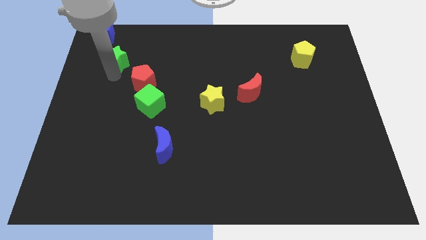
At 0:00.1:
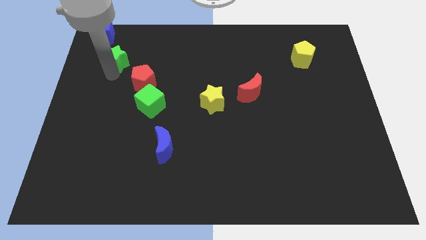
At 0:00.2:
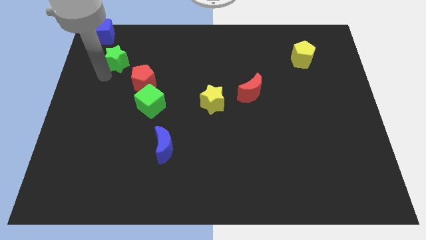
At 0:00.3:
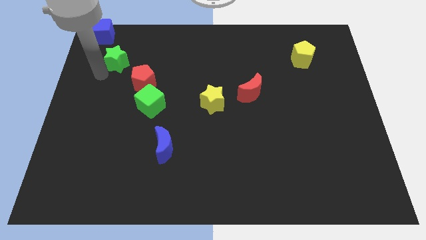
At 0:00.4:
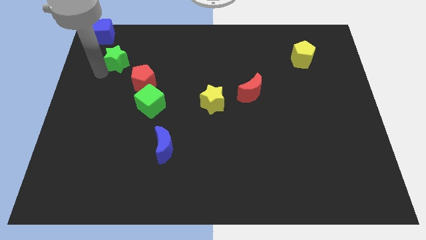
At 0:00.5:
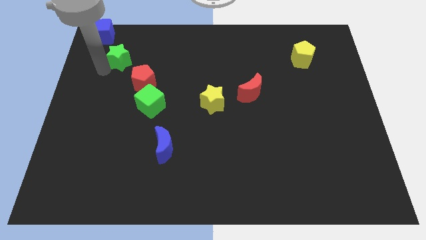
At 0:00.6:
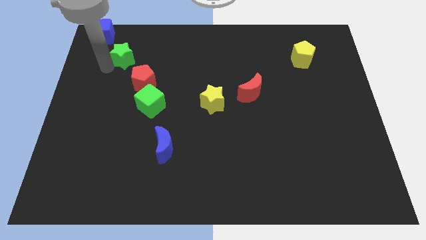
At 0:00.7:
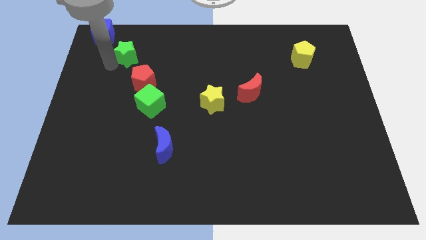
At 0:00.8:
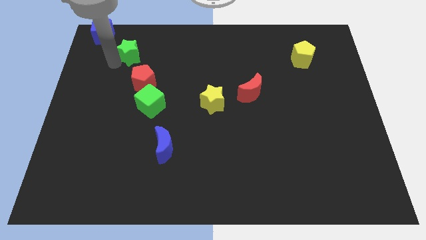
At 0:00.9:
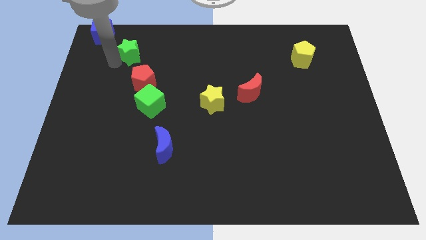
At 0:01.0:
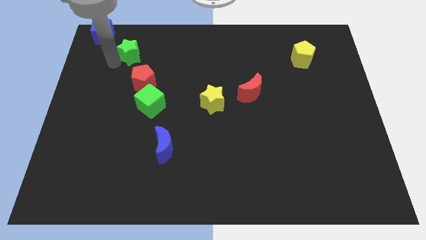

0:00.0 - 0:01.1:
push green star in between red pentagon and blue cube

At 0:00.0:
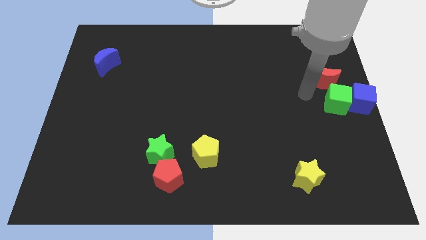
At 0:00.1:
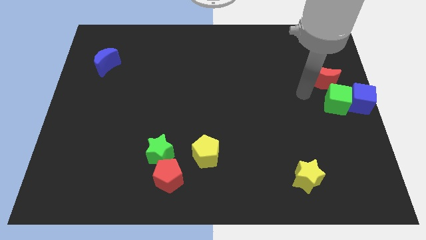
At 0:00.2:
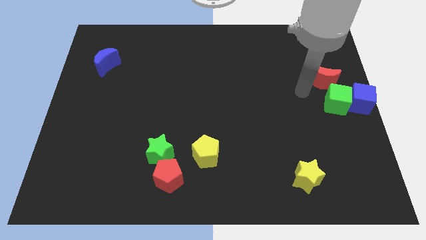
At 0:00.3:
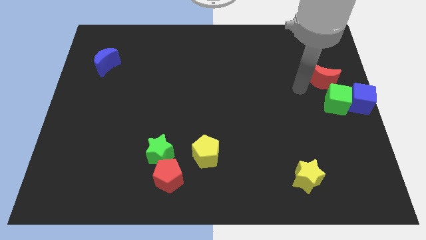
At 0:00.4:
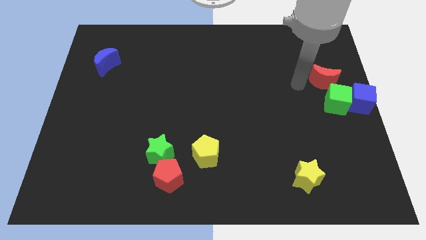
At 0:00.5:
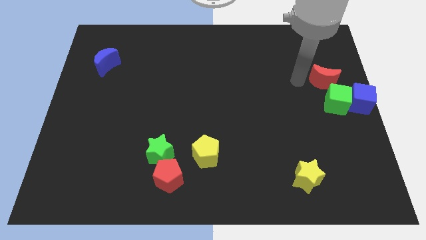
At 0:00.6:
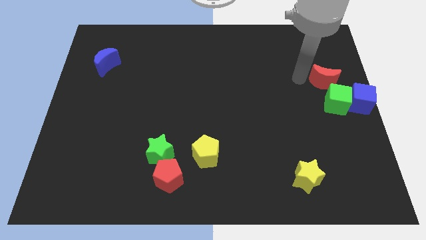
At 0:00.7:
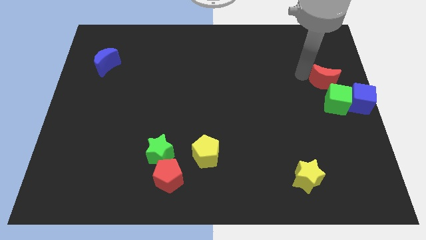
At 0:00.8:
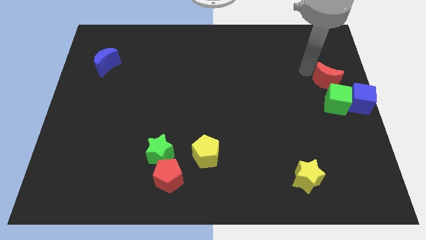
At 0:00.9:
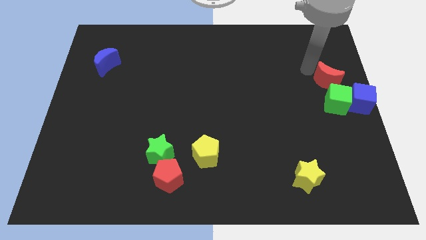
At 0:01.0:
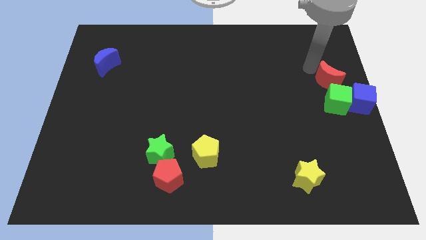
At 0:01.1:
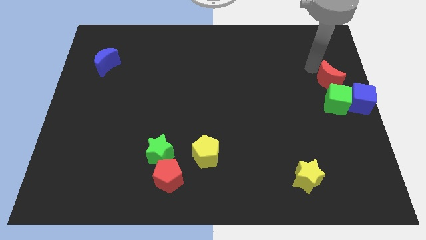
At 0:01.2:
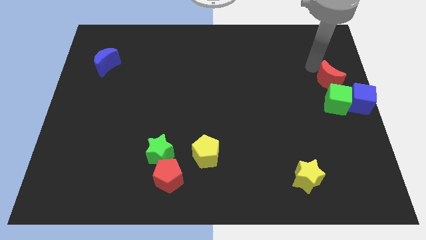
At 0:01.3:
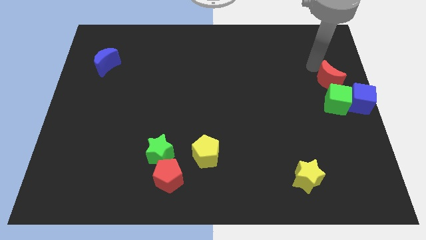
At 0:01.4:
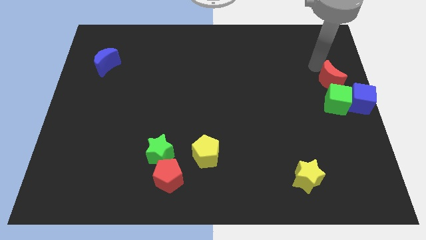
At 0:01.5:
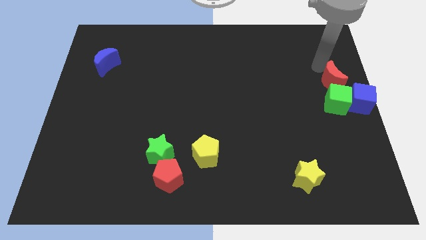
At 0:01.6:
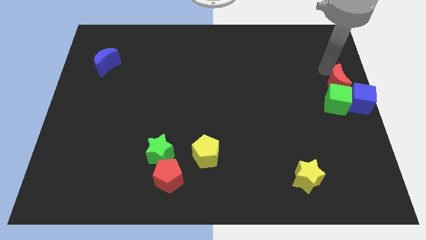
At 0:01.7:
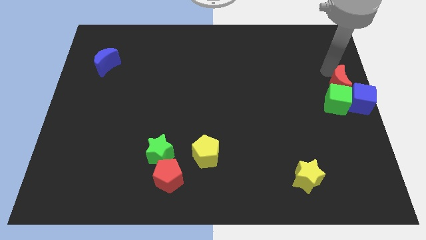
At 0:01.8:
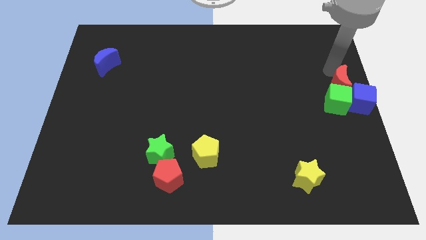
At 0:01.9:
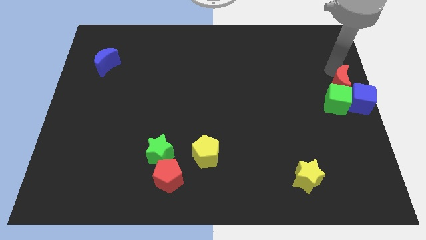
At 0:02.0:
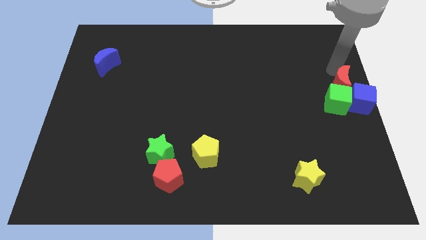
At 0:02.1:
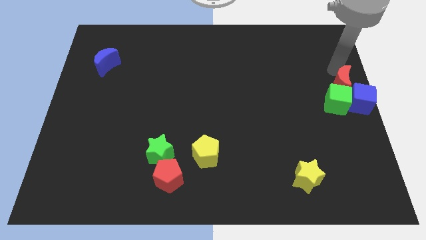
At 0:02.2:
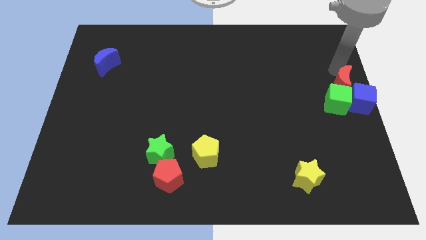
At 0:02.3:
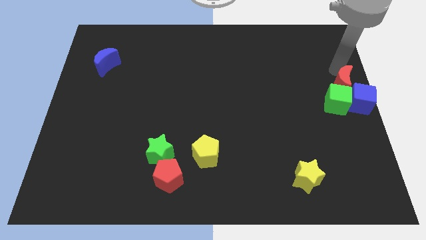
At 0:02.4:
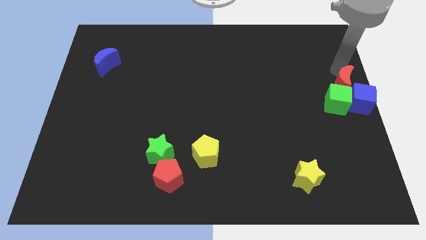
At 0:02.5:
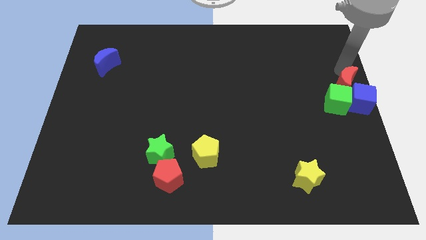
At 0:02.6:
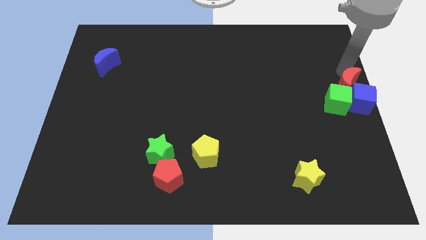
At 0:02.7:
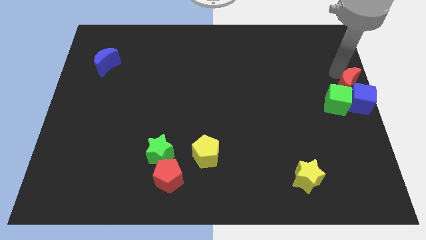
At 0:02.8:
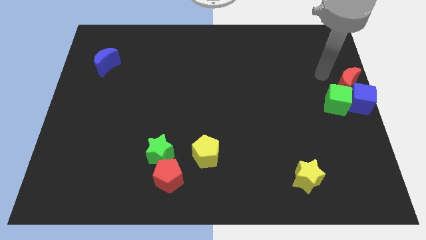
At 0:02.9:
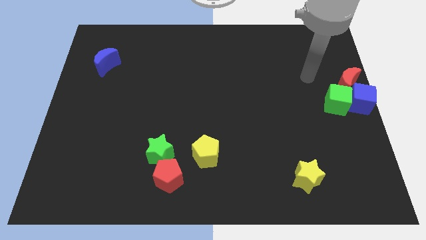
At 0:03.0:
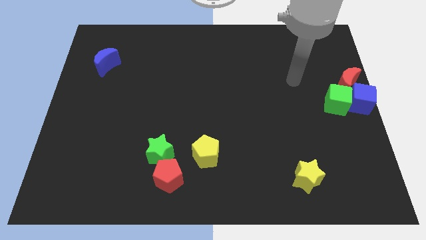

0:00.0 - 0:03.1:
place red moon above green and blue cube

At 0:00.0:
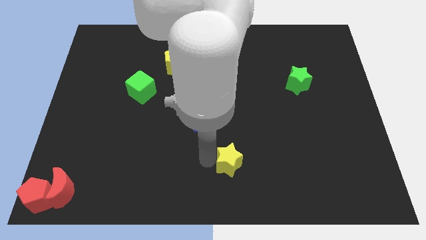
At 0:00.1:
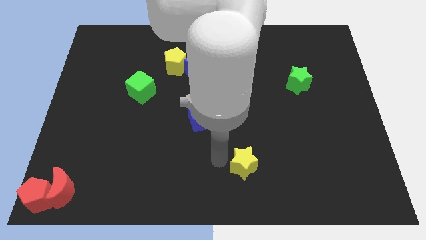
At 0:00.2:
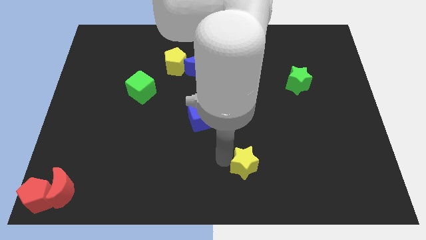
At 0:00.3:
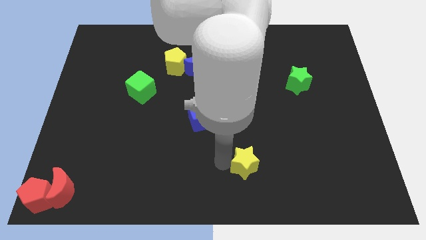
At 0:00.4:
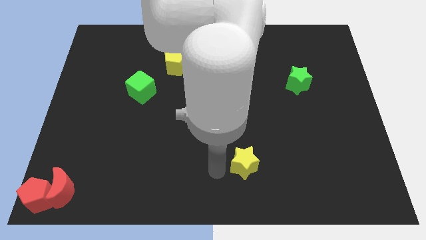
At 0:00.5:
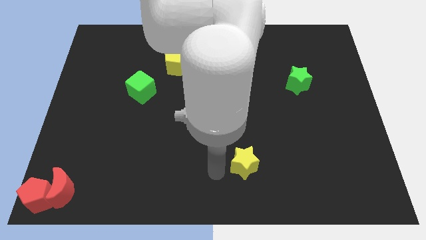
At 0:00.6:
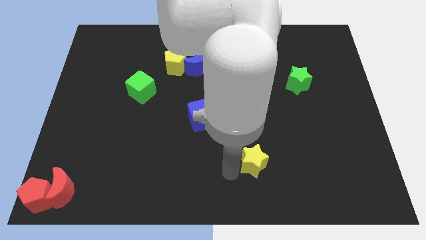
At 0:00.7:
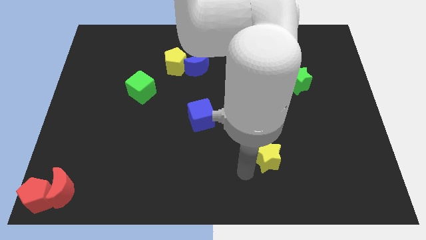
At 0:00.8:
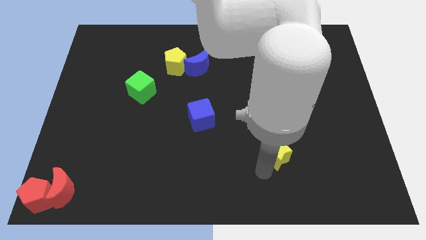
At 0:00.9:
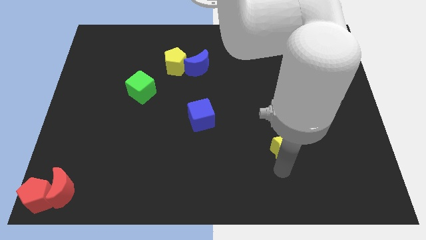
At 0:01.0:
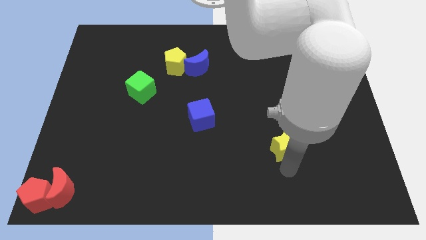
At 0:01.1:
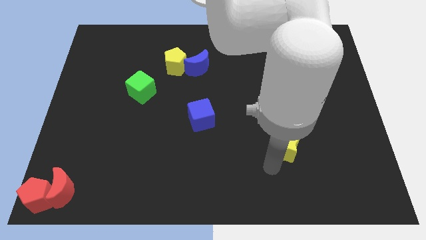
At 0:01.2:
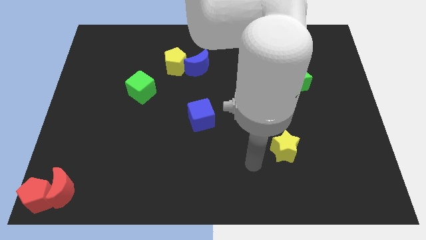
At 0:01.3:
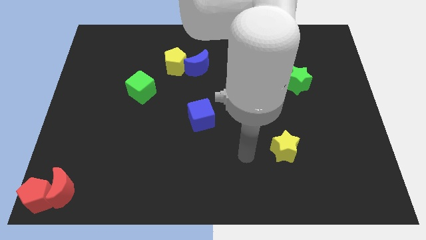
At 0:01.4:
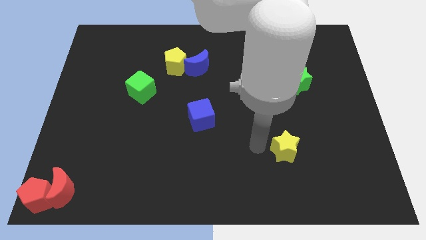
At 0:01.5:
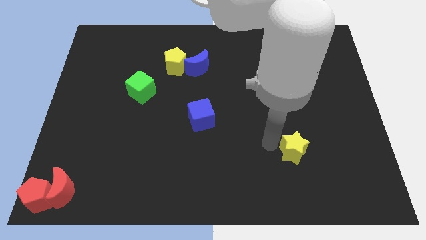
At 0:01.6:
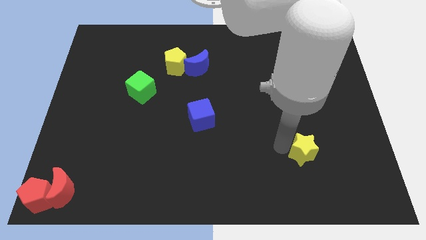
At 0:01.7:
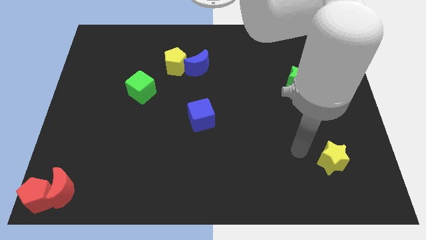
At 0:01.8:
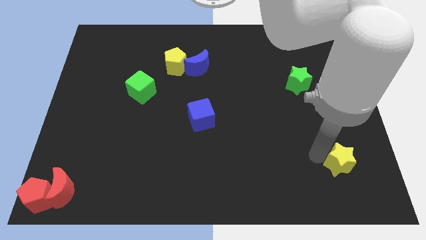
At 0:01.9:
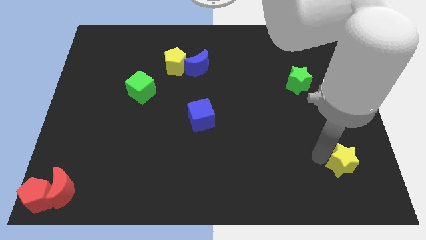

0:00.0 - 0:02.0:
push the yellow star diagonally bottom right to the green star

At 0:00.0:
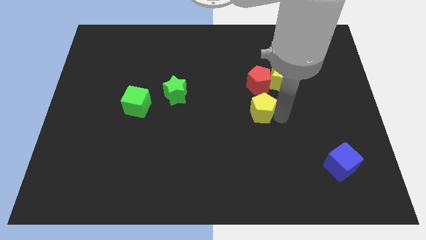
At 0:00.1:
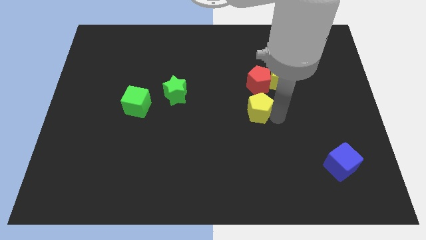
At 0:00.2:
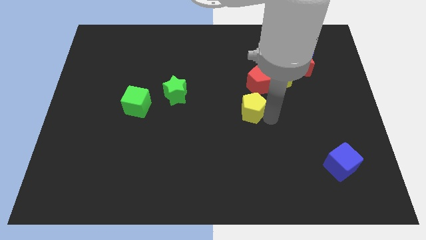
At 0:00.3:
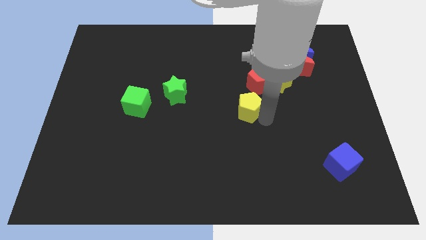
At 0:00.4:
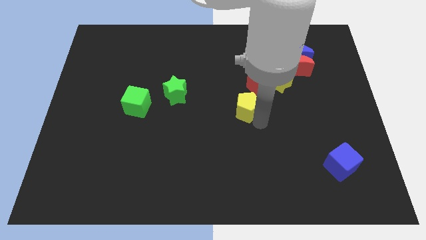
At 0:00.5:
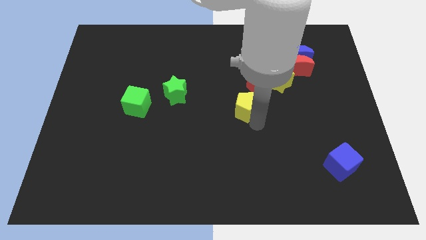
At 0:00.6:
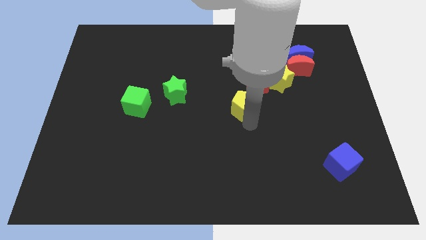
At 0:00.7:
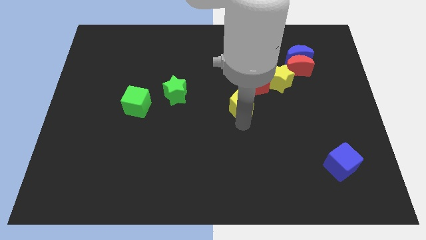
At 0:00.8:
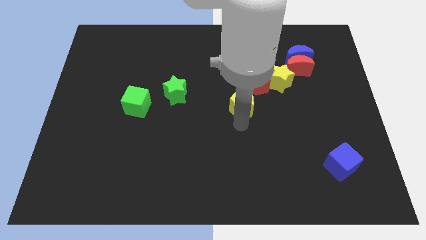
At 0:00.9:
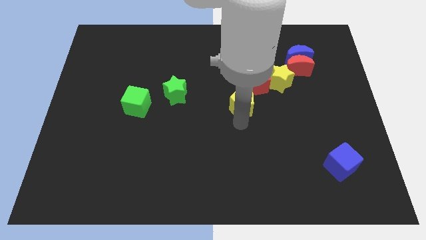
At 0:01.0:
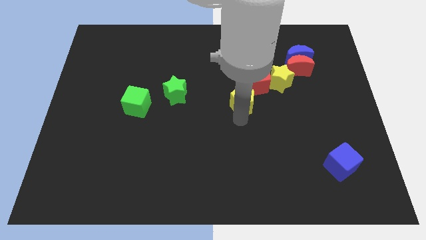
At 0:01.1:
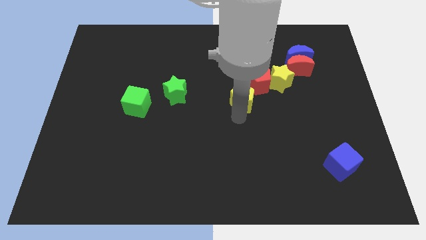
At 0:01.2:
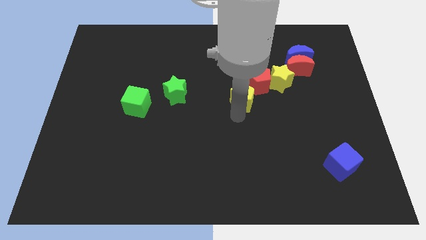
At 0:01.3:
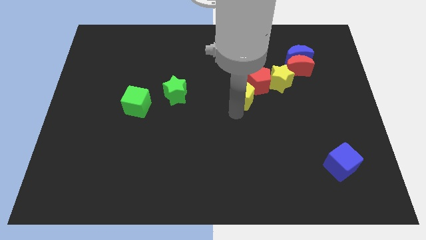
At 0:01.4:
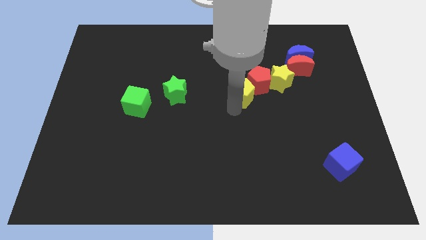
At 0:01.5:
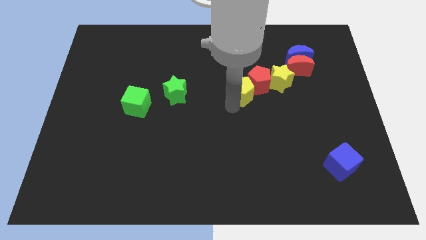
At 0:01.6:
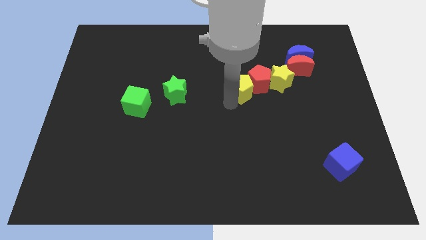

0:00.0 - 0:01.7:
place the yellow pentagon left of red pentagon

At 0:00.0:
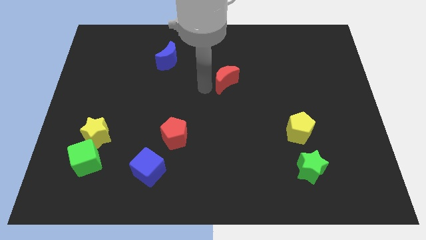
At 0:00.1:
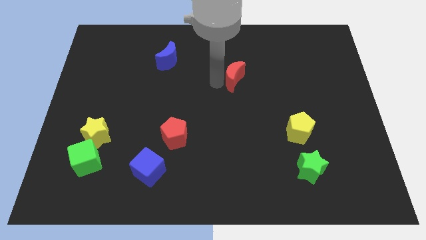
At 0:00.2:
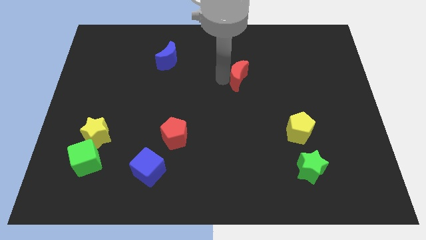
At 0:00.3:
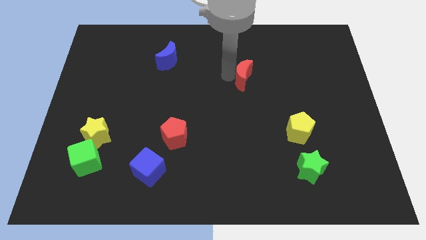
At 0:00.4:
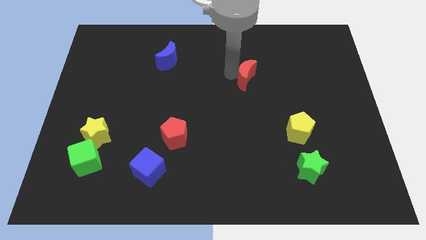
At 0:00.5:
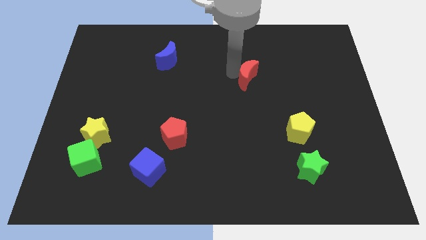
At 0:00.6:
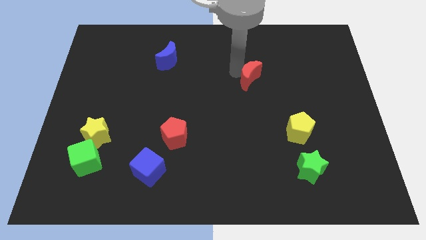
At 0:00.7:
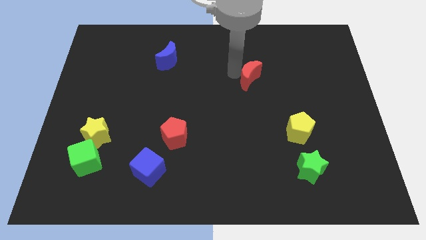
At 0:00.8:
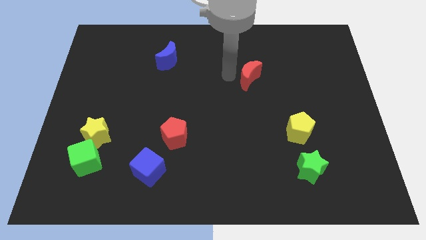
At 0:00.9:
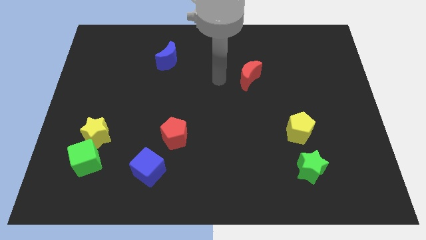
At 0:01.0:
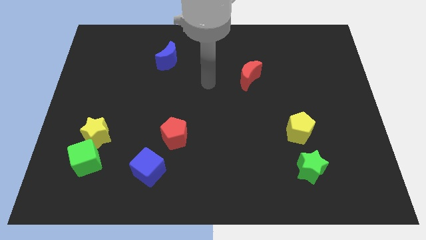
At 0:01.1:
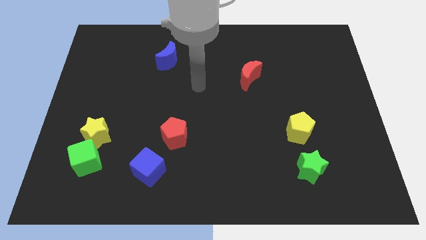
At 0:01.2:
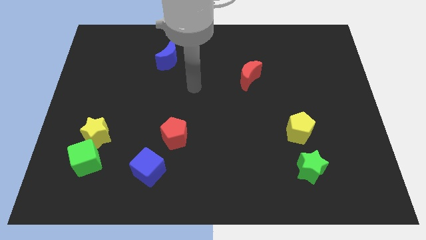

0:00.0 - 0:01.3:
push the red crescent slightly to the right side of the board
